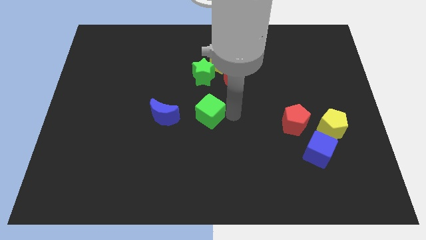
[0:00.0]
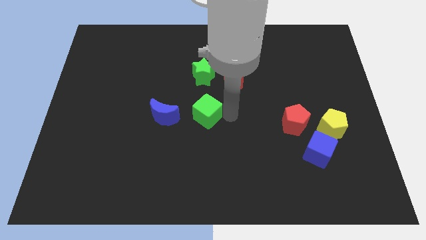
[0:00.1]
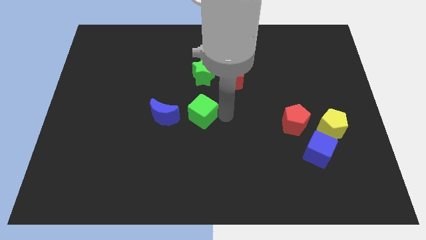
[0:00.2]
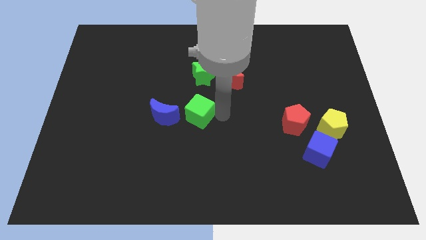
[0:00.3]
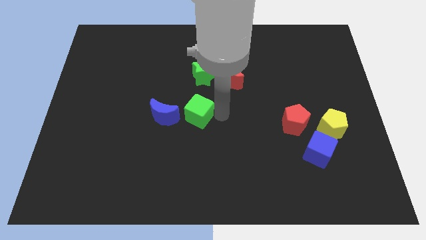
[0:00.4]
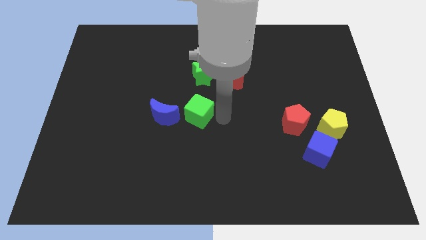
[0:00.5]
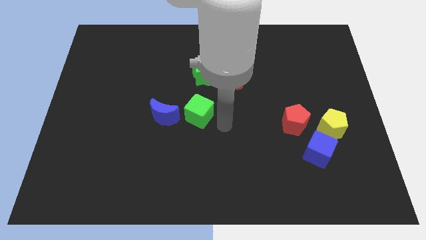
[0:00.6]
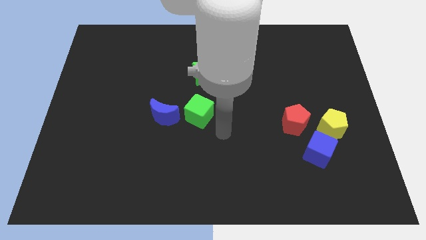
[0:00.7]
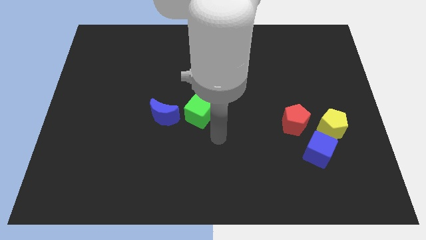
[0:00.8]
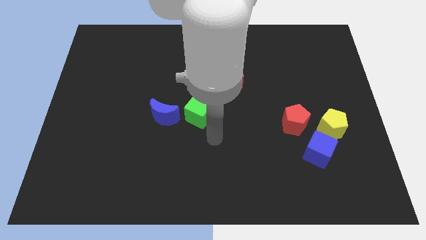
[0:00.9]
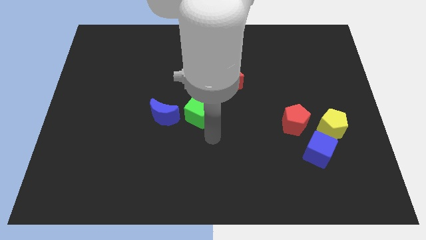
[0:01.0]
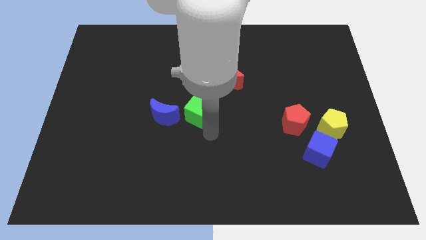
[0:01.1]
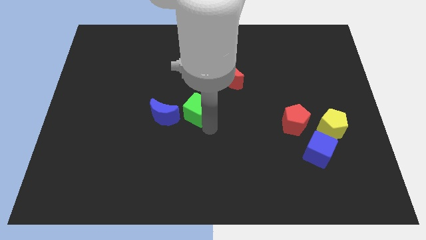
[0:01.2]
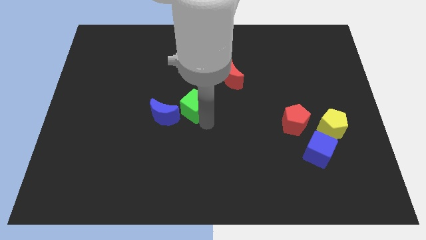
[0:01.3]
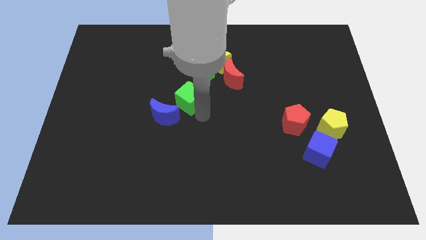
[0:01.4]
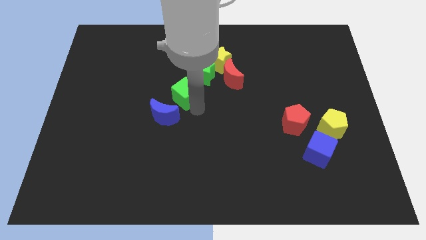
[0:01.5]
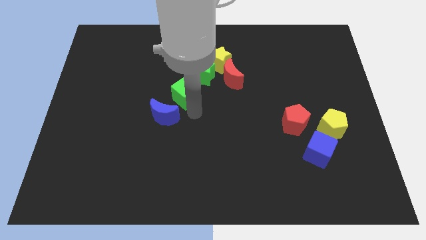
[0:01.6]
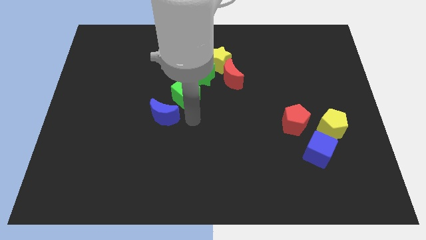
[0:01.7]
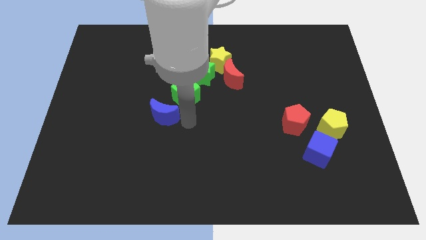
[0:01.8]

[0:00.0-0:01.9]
push the green cube in between blue crescent and green star

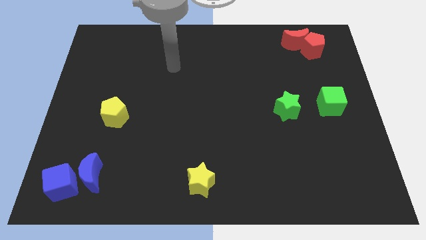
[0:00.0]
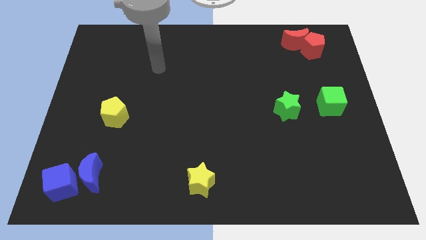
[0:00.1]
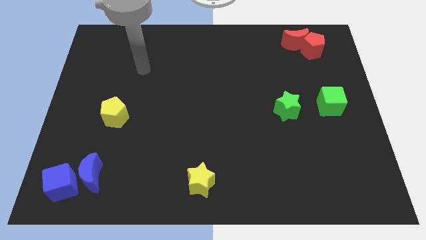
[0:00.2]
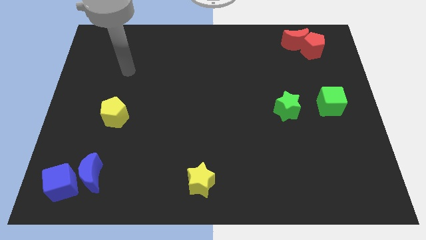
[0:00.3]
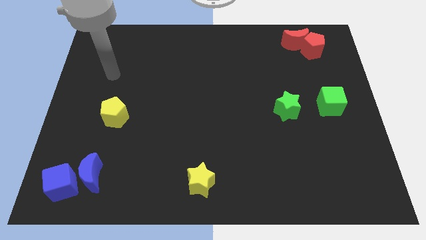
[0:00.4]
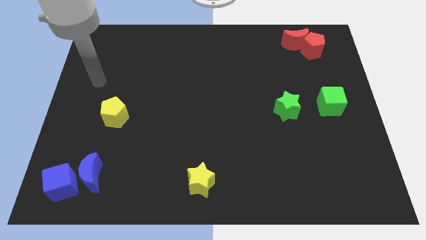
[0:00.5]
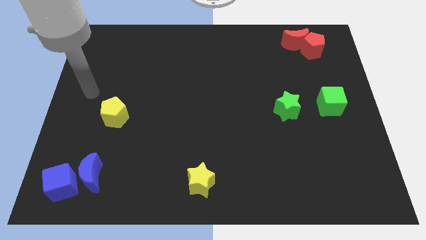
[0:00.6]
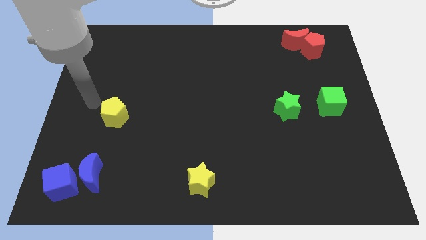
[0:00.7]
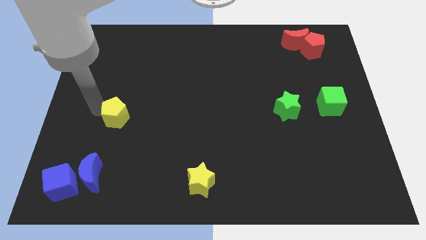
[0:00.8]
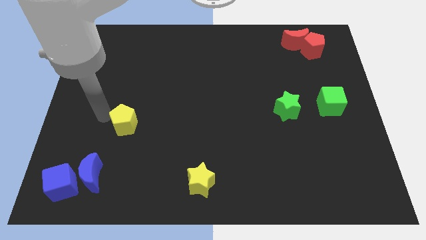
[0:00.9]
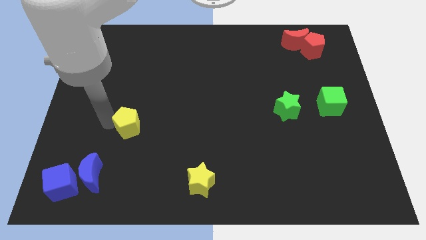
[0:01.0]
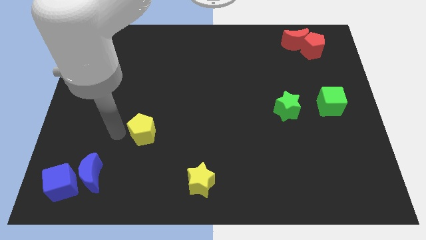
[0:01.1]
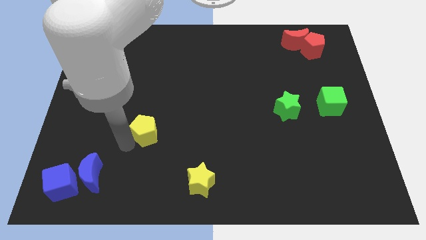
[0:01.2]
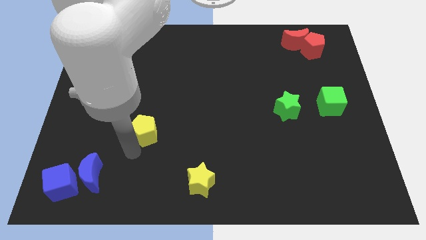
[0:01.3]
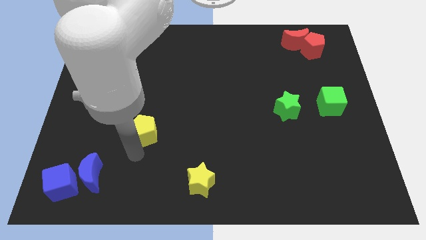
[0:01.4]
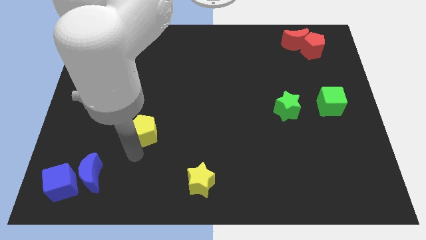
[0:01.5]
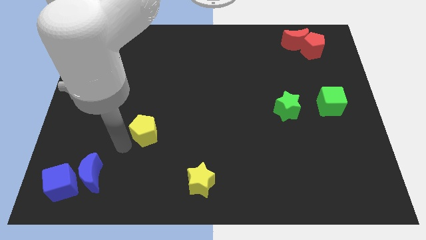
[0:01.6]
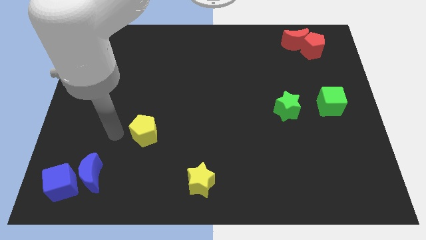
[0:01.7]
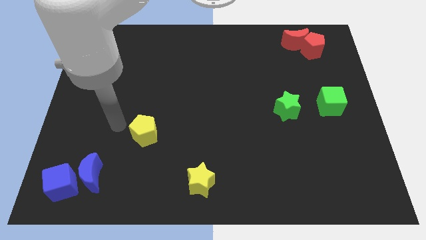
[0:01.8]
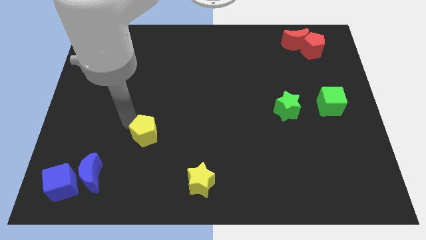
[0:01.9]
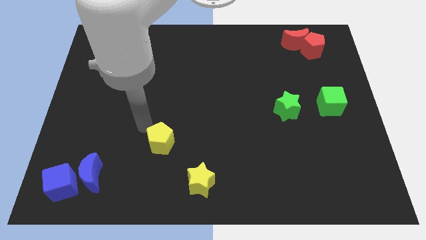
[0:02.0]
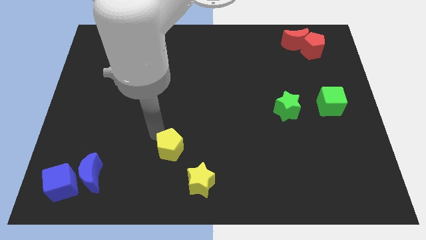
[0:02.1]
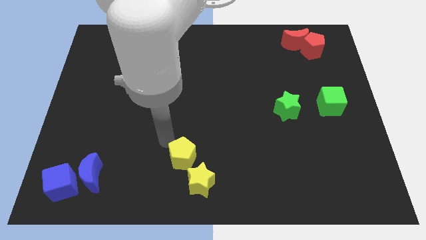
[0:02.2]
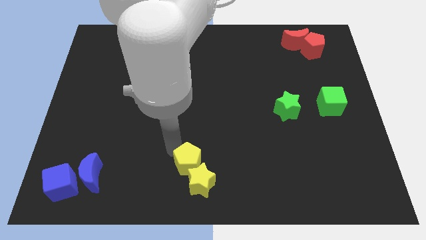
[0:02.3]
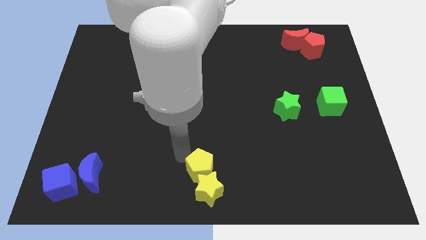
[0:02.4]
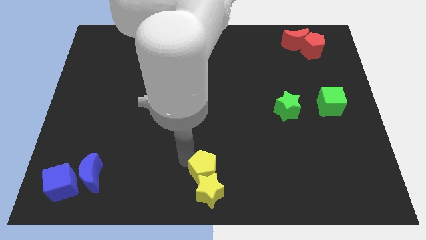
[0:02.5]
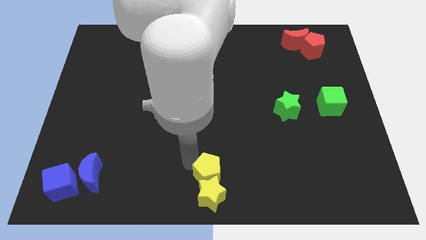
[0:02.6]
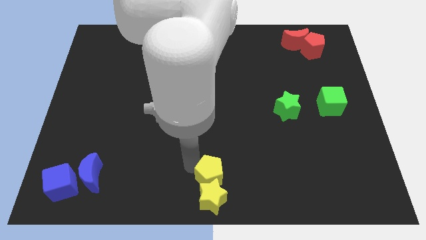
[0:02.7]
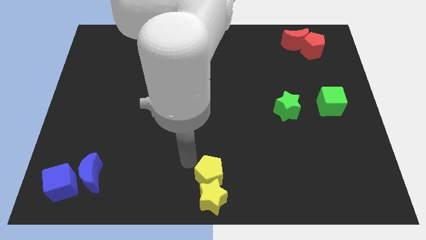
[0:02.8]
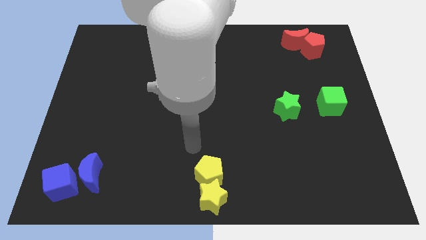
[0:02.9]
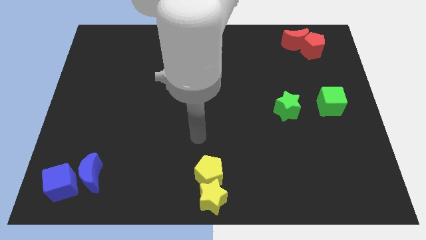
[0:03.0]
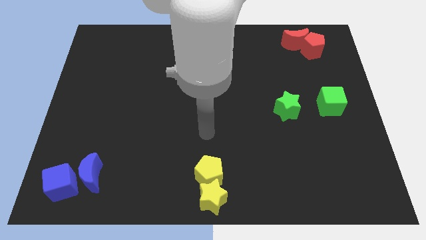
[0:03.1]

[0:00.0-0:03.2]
push the yellow pentagon into the yellow star

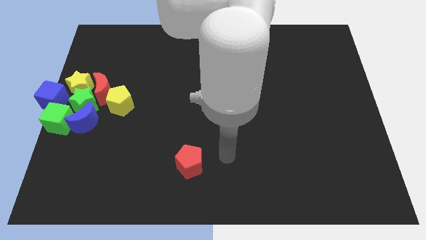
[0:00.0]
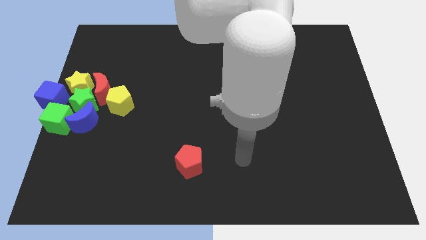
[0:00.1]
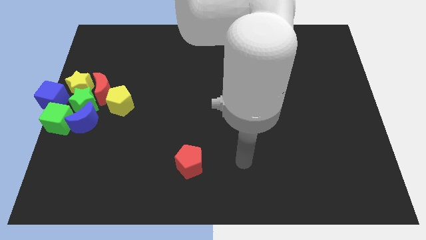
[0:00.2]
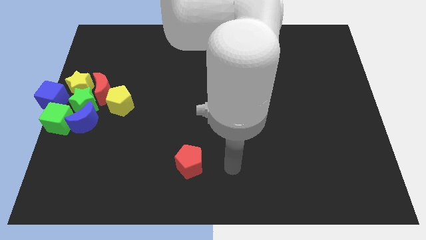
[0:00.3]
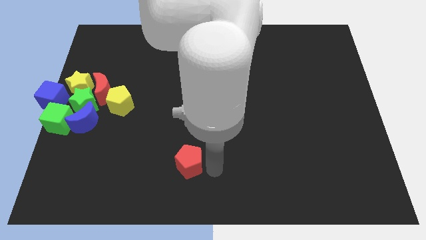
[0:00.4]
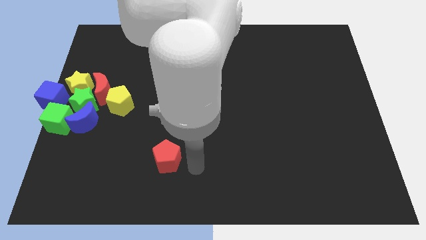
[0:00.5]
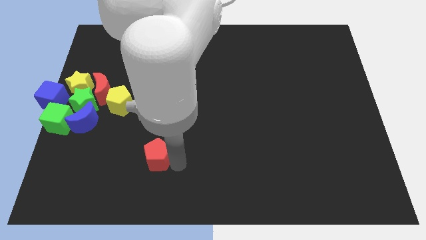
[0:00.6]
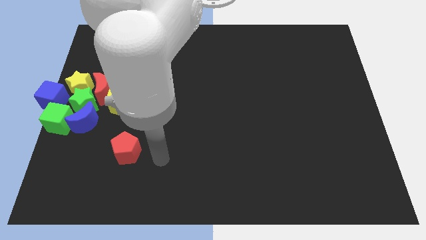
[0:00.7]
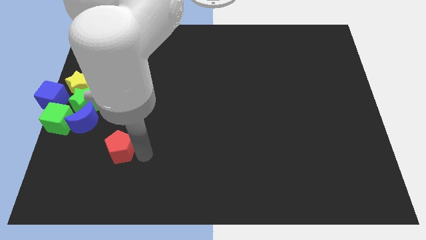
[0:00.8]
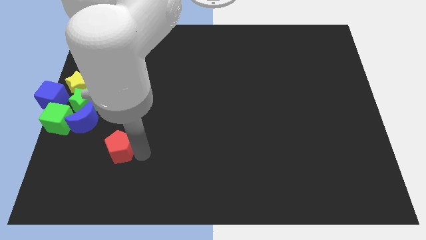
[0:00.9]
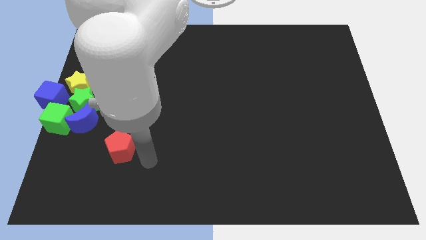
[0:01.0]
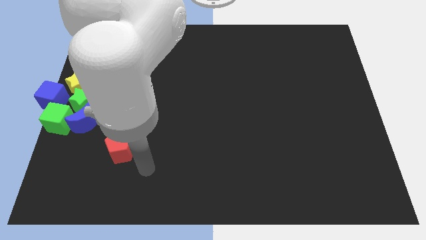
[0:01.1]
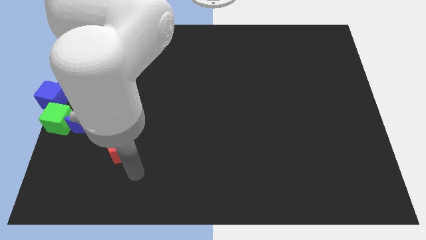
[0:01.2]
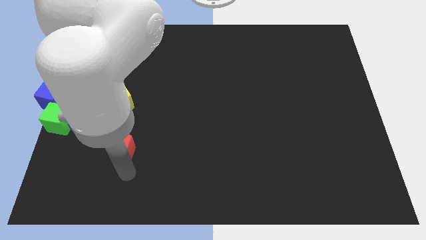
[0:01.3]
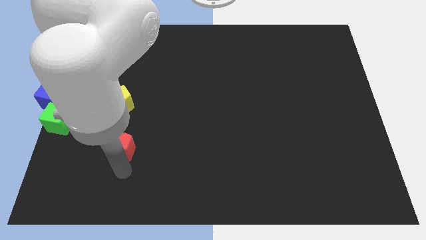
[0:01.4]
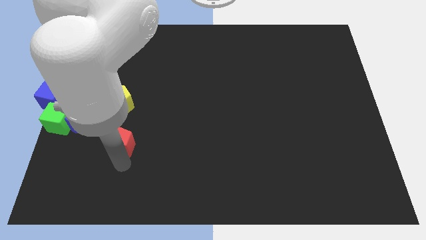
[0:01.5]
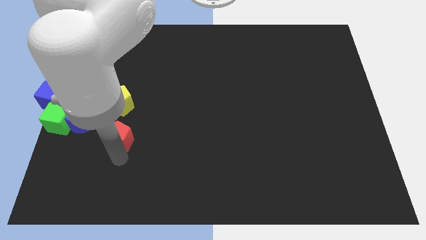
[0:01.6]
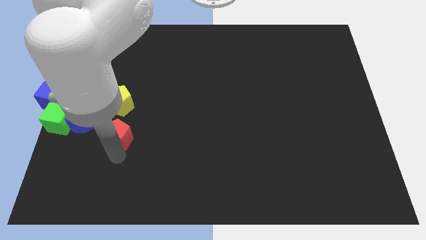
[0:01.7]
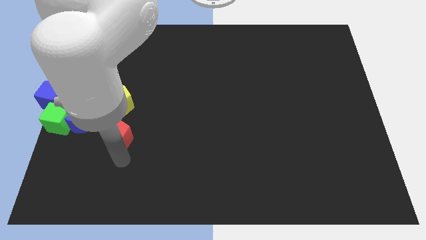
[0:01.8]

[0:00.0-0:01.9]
move the red pentagon towards the blue crescent

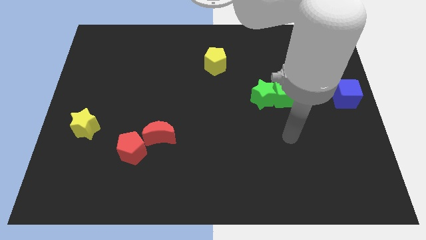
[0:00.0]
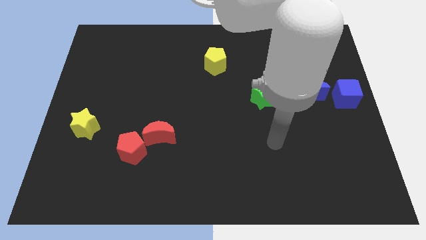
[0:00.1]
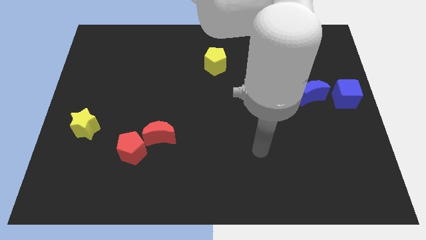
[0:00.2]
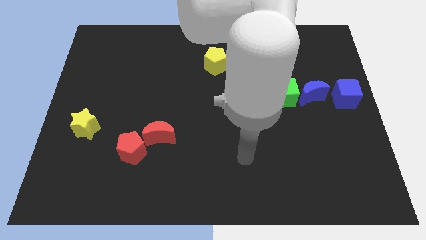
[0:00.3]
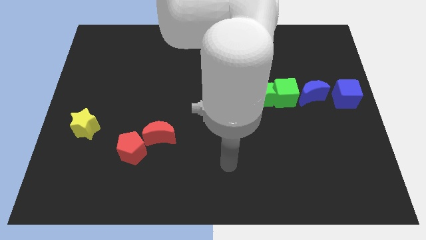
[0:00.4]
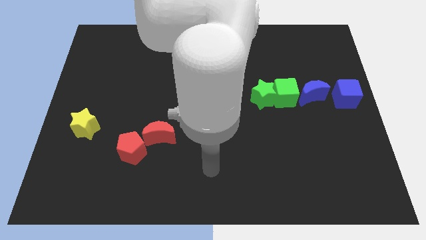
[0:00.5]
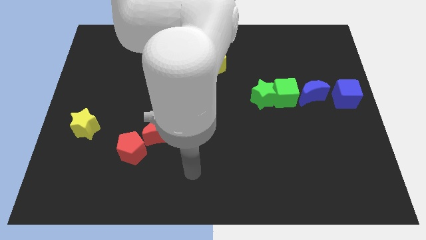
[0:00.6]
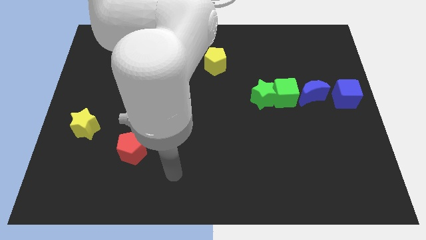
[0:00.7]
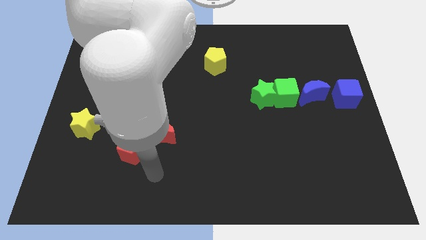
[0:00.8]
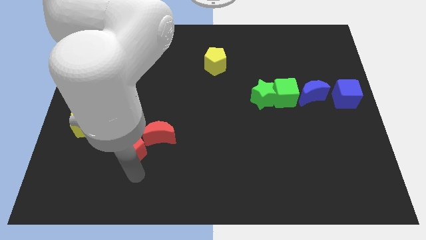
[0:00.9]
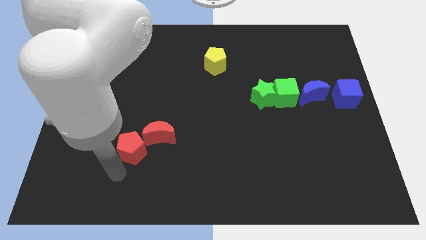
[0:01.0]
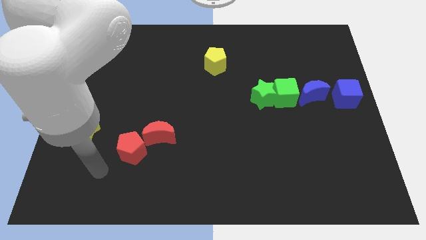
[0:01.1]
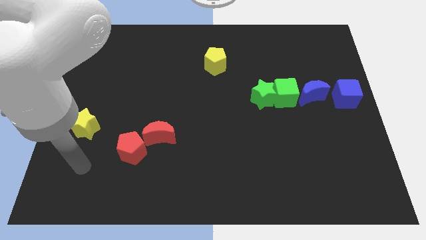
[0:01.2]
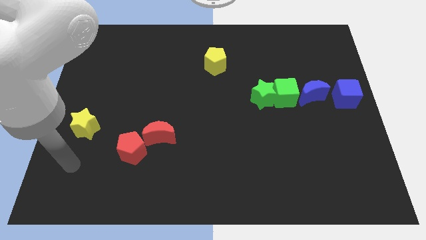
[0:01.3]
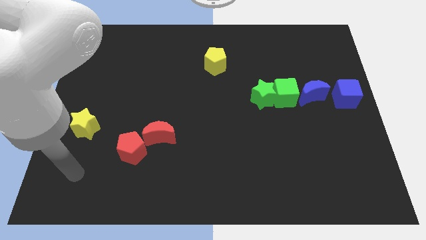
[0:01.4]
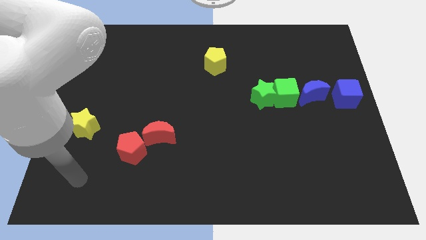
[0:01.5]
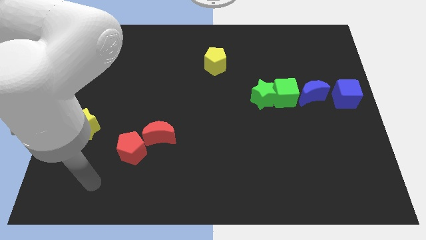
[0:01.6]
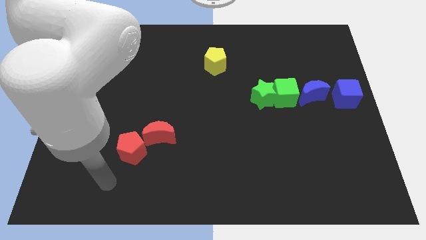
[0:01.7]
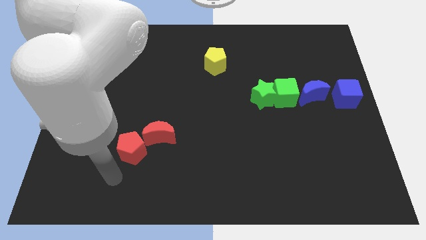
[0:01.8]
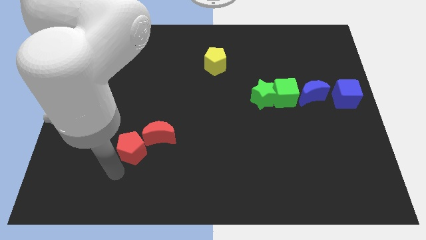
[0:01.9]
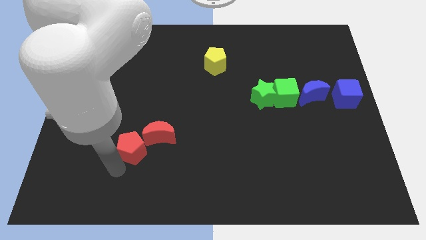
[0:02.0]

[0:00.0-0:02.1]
move the arm to the red pentagon
